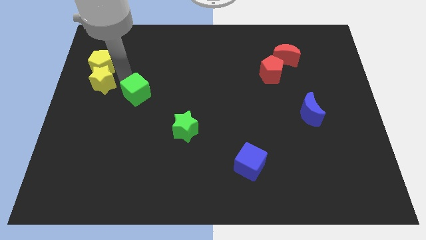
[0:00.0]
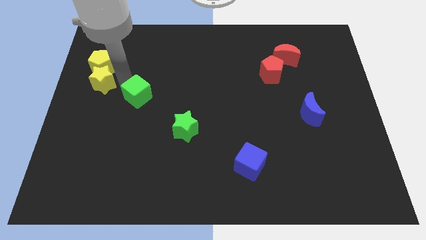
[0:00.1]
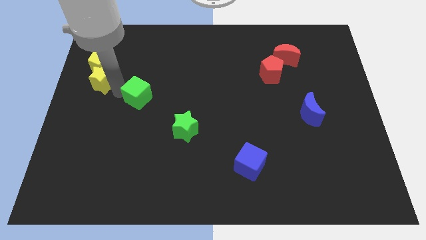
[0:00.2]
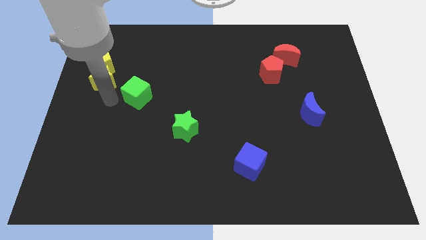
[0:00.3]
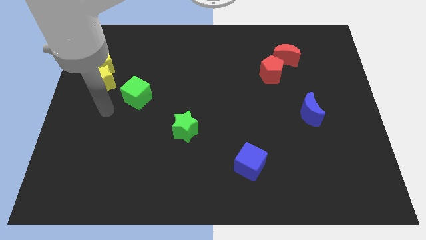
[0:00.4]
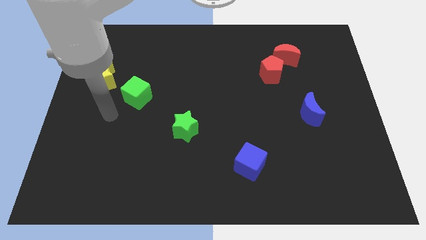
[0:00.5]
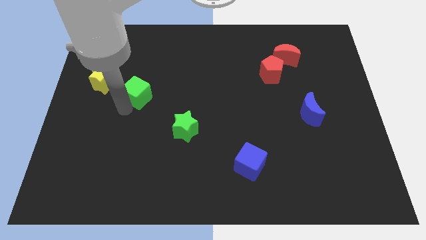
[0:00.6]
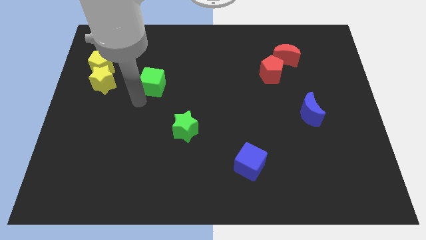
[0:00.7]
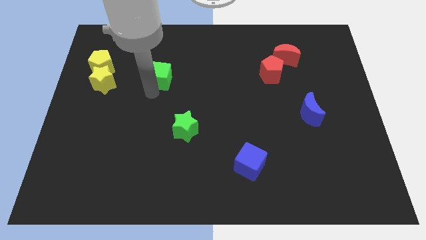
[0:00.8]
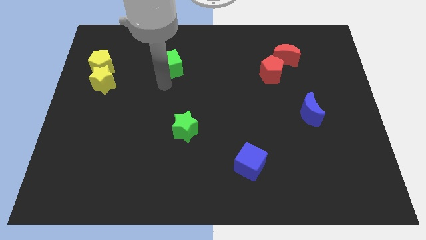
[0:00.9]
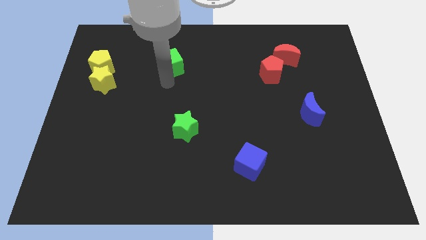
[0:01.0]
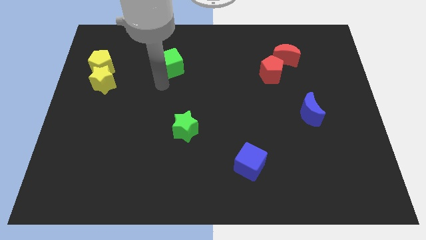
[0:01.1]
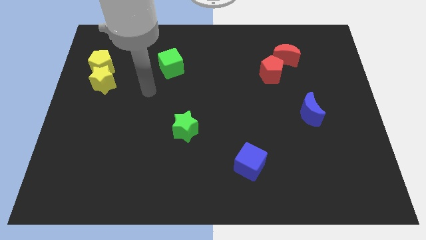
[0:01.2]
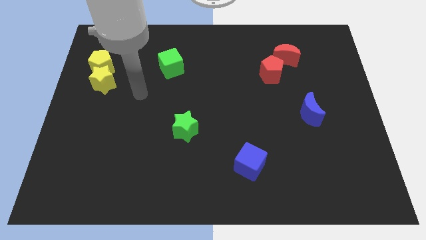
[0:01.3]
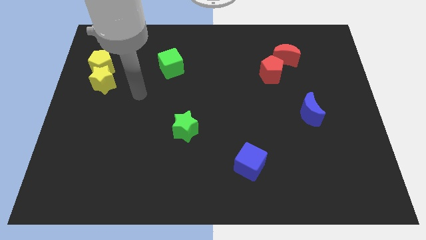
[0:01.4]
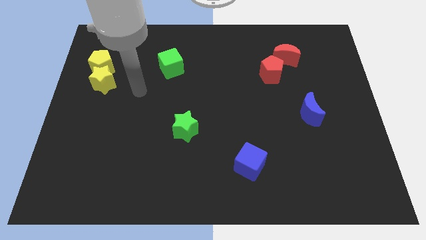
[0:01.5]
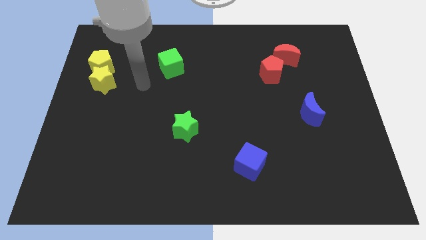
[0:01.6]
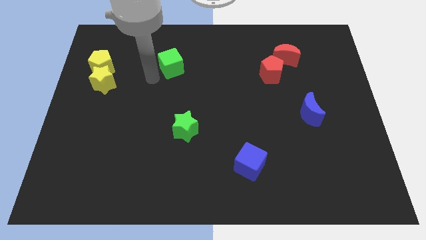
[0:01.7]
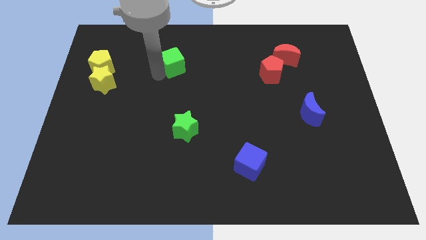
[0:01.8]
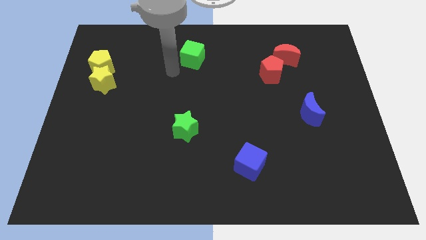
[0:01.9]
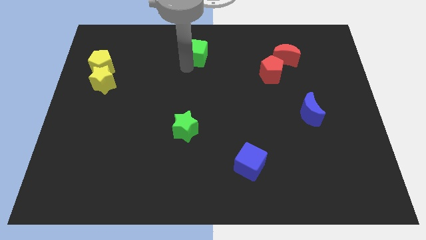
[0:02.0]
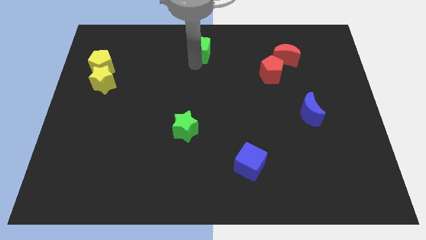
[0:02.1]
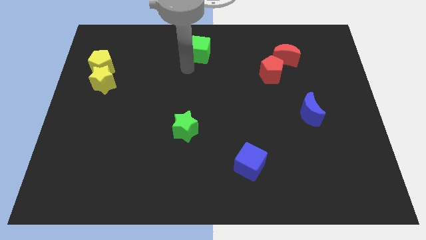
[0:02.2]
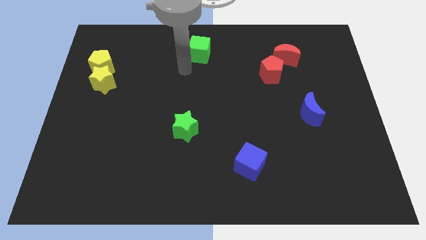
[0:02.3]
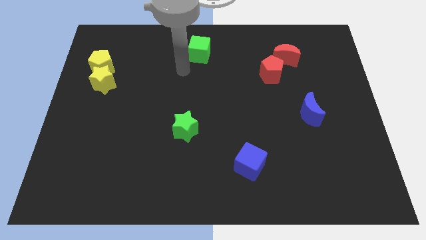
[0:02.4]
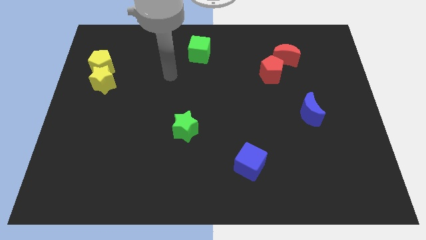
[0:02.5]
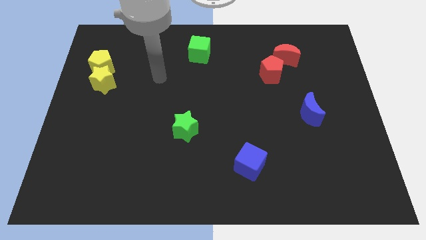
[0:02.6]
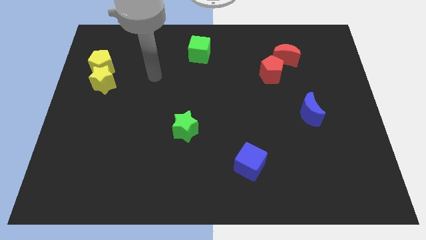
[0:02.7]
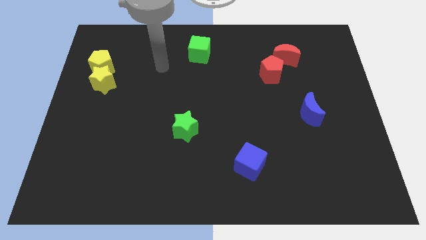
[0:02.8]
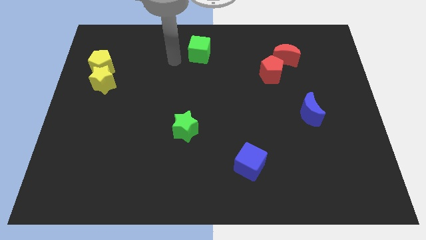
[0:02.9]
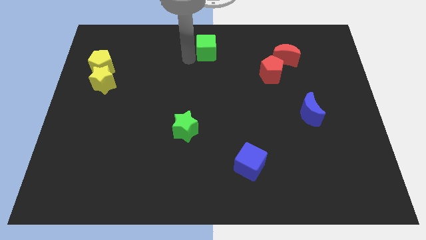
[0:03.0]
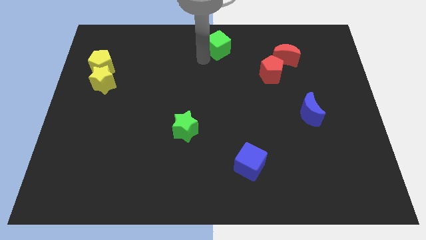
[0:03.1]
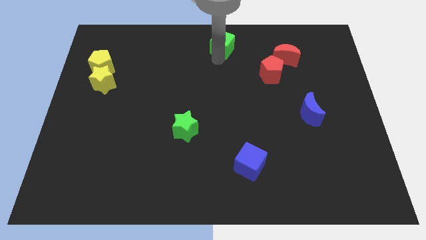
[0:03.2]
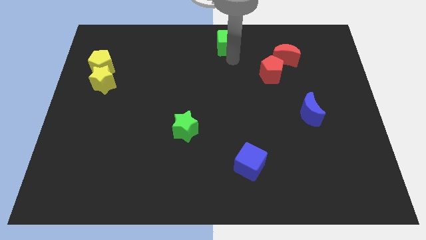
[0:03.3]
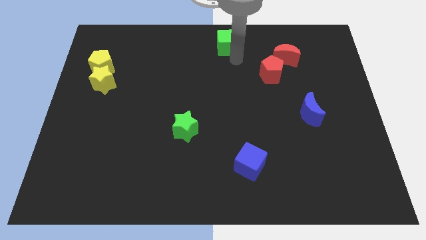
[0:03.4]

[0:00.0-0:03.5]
place the green cube diagonal top left to the red pentagon

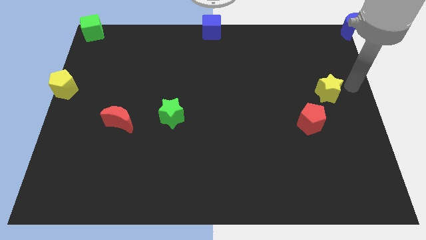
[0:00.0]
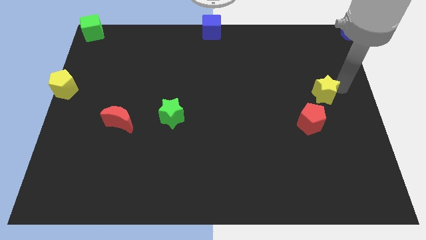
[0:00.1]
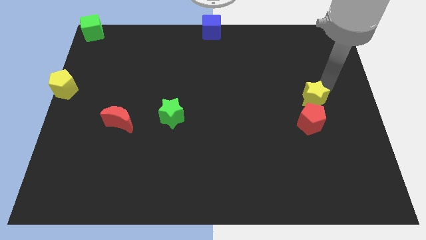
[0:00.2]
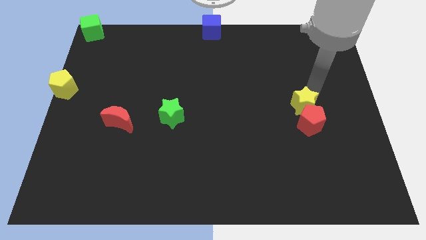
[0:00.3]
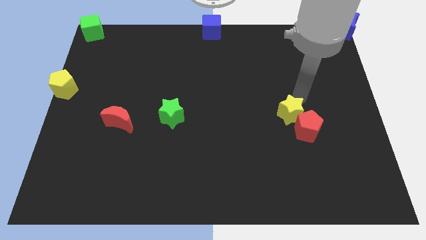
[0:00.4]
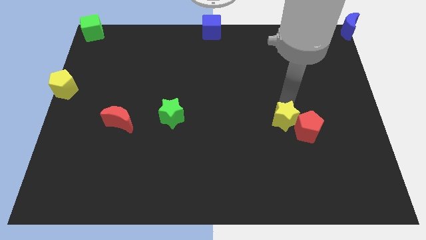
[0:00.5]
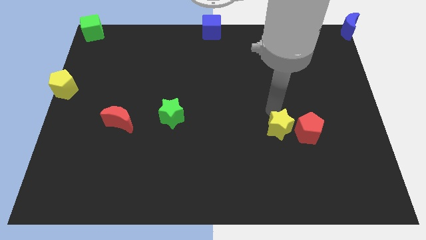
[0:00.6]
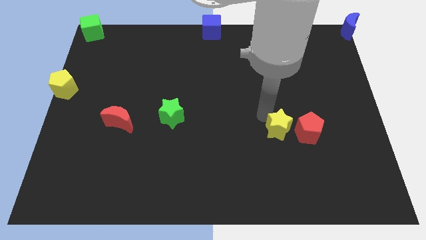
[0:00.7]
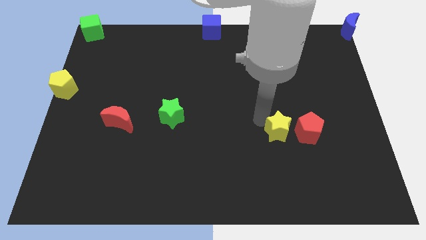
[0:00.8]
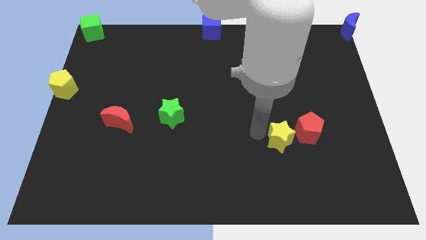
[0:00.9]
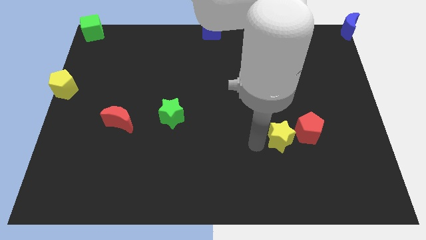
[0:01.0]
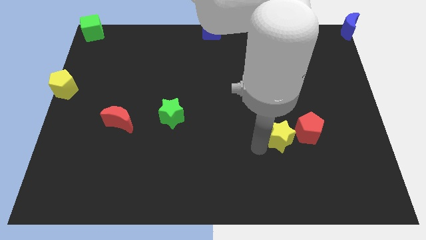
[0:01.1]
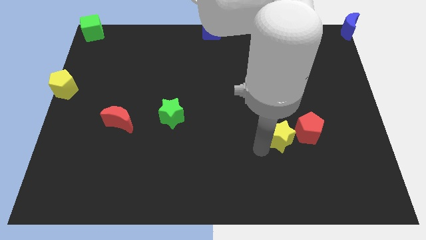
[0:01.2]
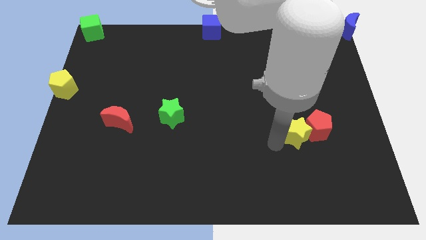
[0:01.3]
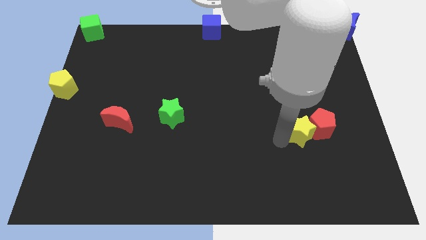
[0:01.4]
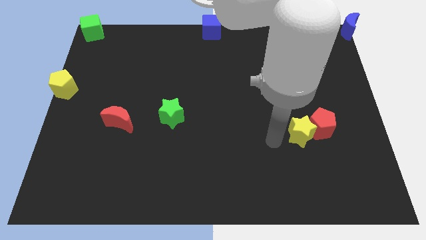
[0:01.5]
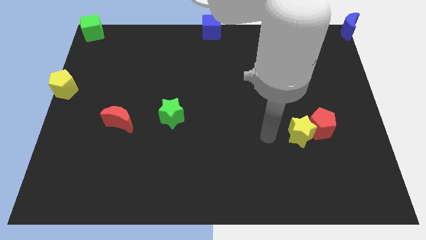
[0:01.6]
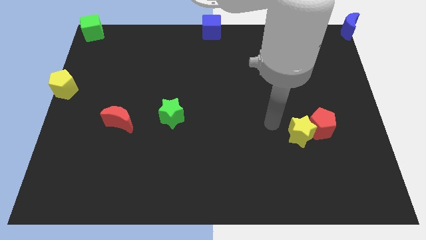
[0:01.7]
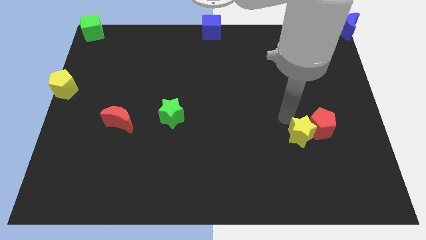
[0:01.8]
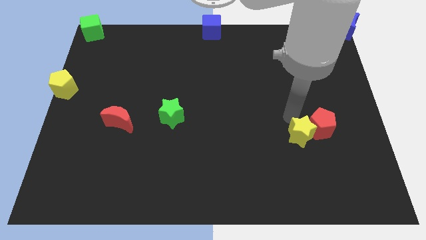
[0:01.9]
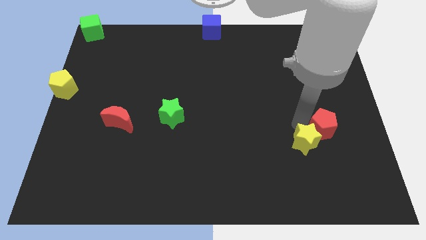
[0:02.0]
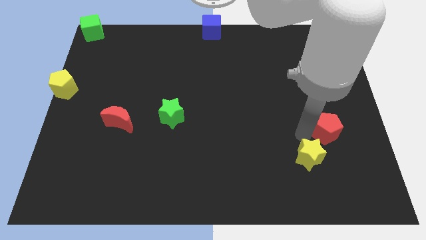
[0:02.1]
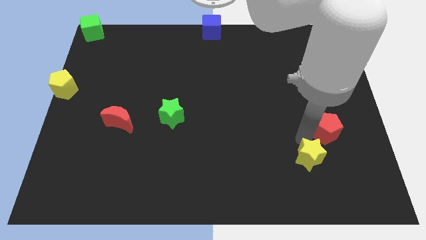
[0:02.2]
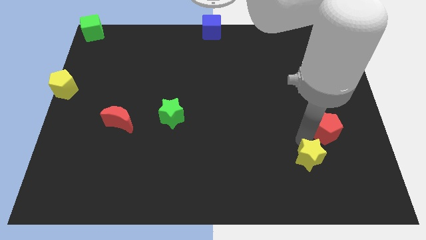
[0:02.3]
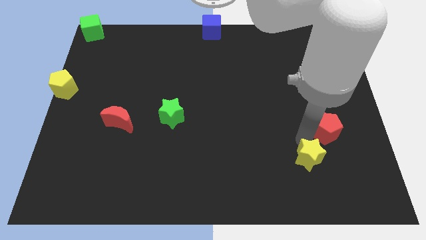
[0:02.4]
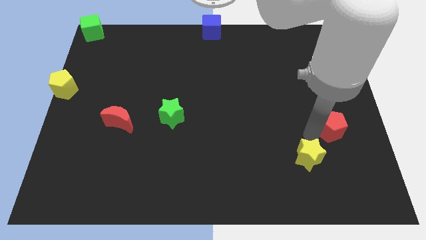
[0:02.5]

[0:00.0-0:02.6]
move the yellow star slightly along with the red pentagon to the right side of the board

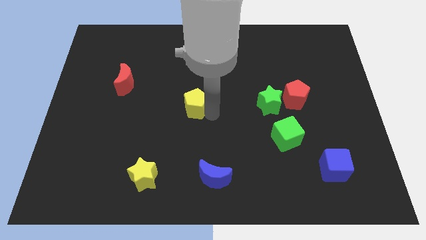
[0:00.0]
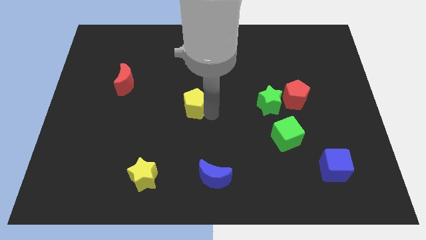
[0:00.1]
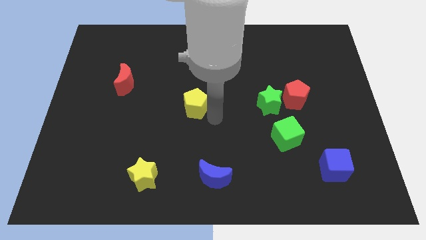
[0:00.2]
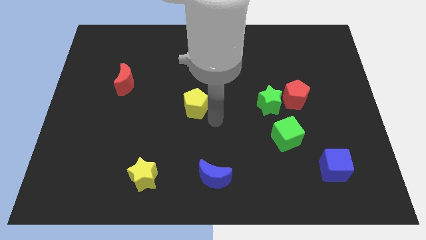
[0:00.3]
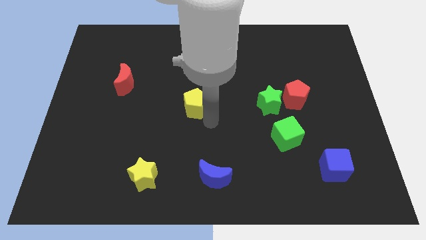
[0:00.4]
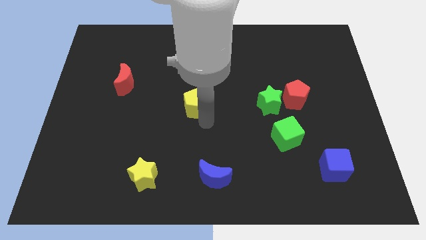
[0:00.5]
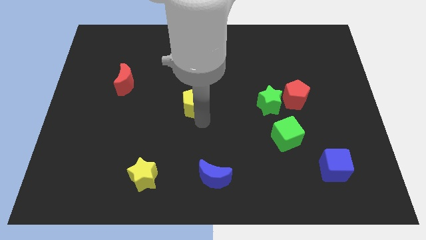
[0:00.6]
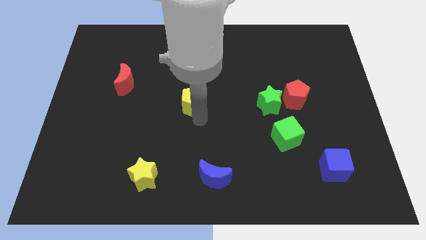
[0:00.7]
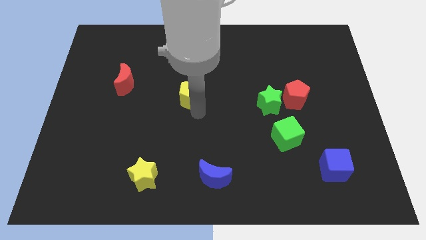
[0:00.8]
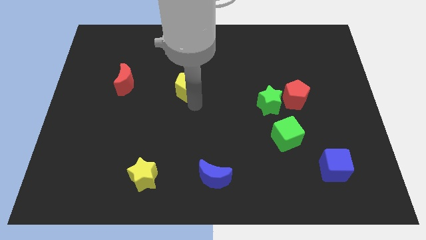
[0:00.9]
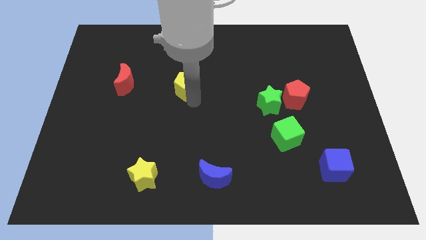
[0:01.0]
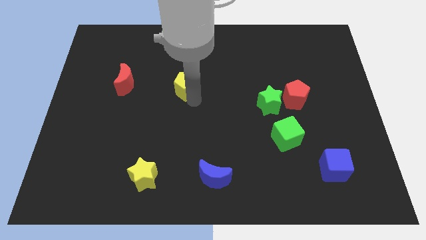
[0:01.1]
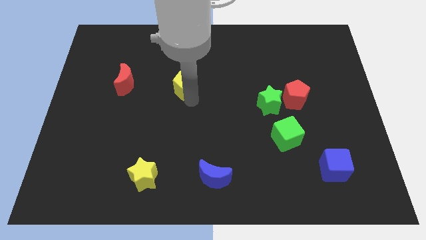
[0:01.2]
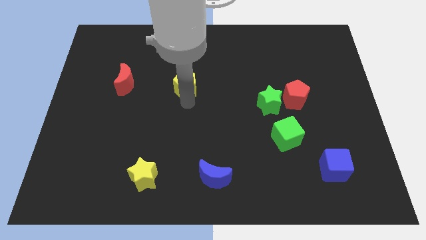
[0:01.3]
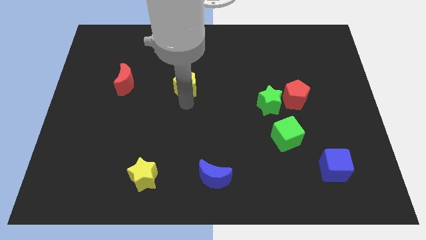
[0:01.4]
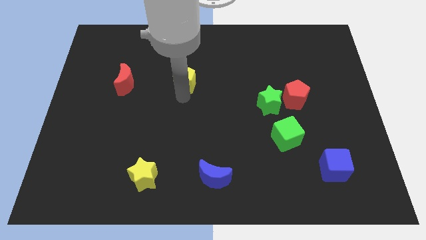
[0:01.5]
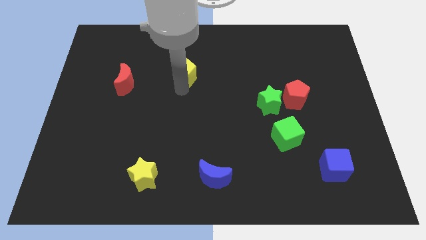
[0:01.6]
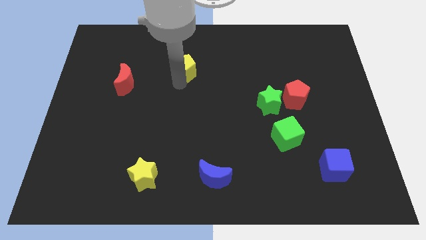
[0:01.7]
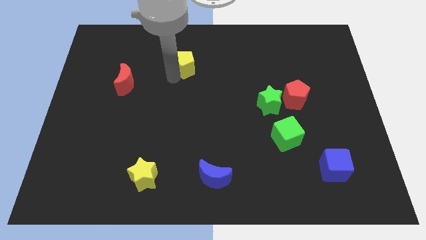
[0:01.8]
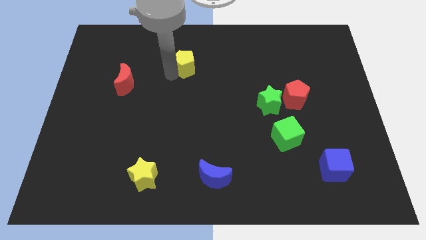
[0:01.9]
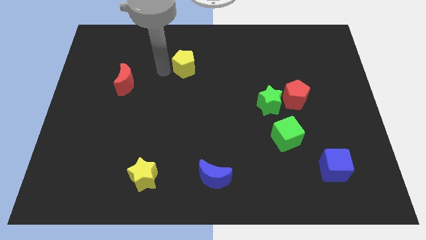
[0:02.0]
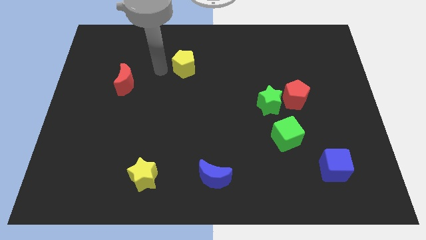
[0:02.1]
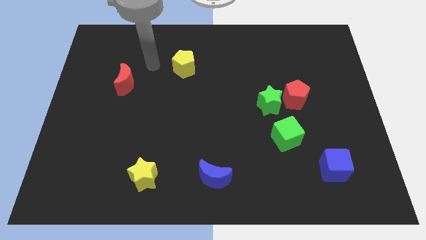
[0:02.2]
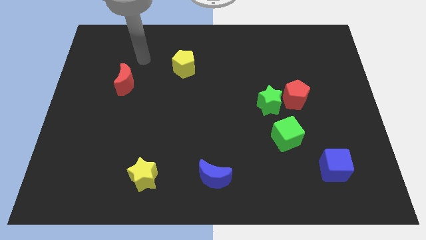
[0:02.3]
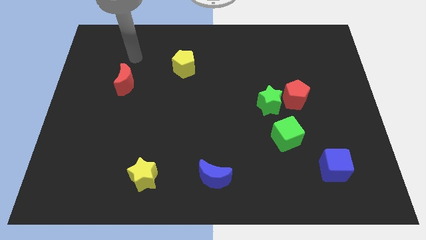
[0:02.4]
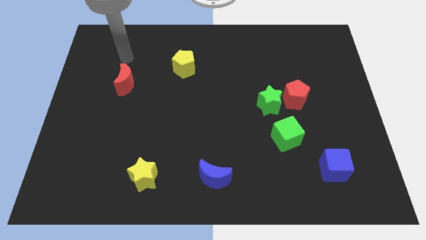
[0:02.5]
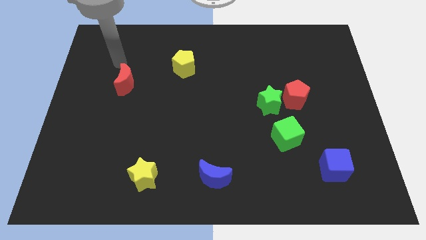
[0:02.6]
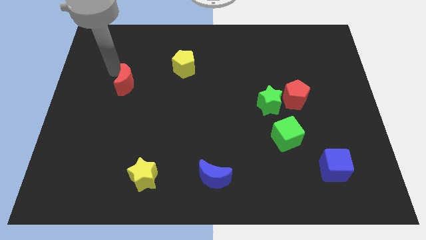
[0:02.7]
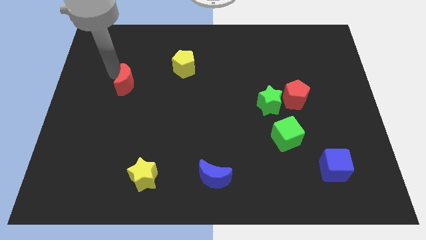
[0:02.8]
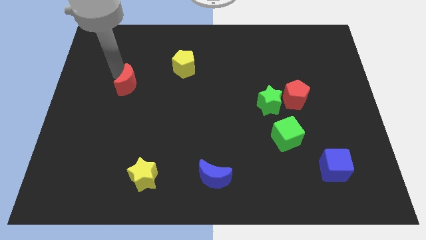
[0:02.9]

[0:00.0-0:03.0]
move the yellow pentagon towards up
